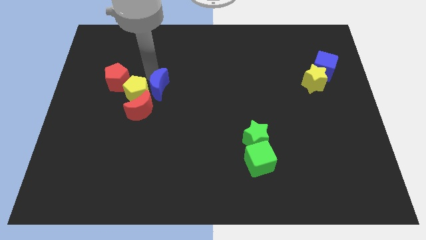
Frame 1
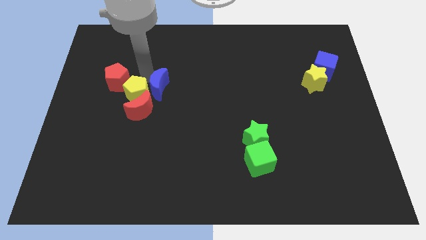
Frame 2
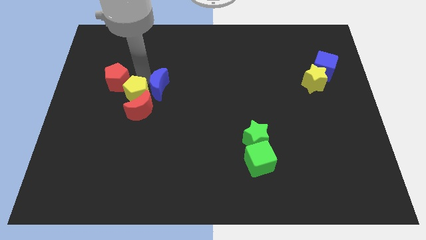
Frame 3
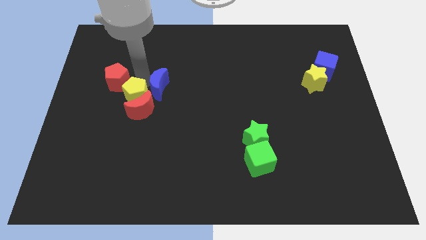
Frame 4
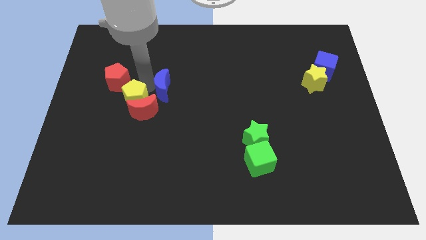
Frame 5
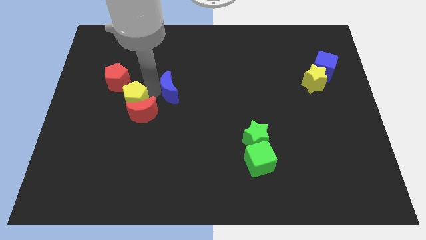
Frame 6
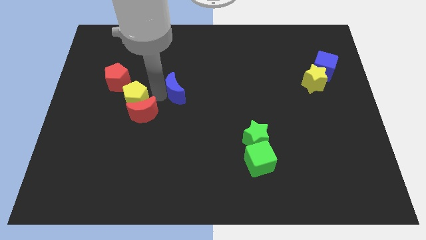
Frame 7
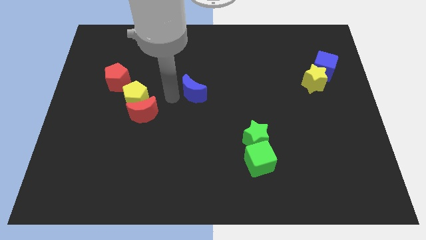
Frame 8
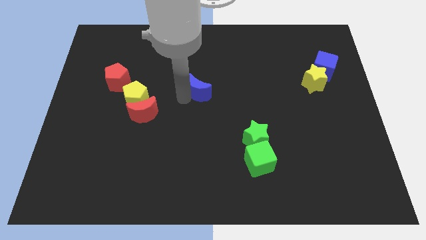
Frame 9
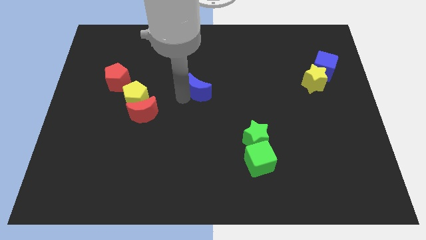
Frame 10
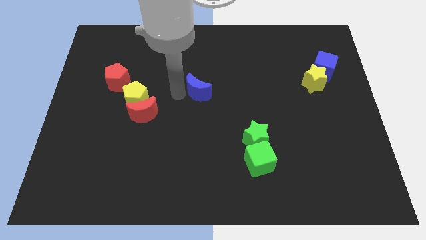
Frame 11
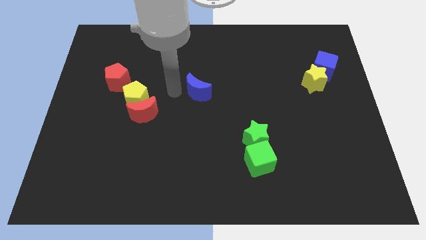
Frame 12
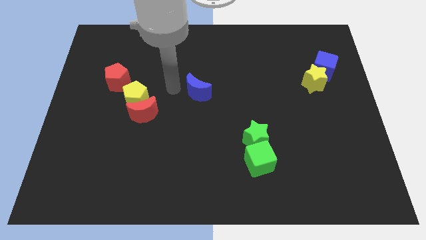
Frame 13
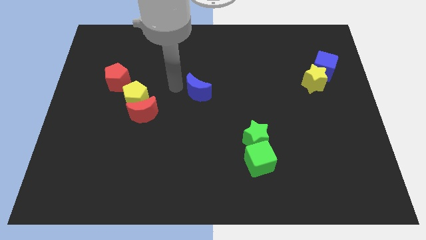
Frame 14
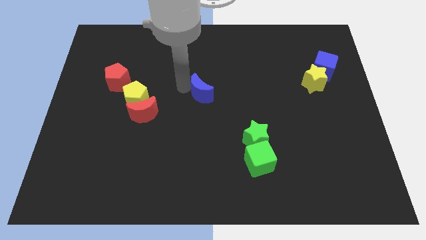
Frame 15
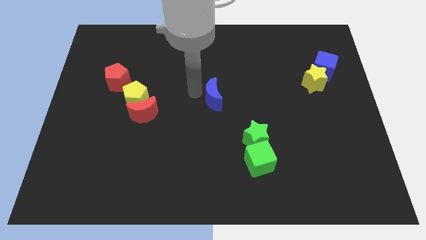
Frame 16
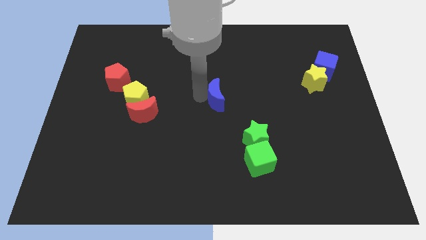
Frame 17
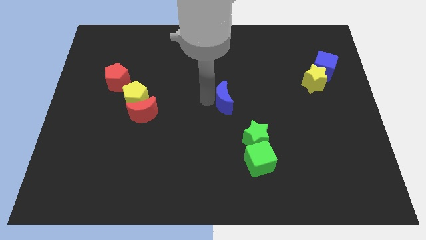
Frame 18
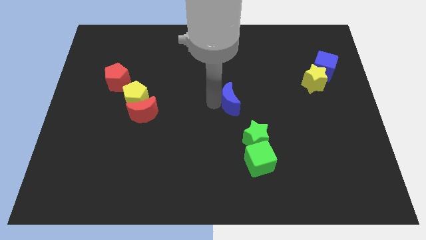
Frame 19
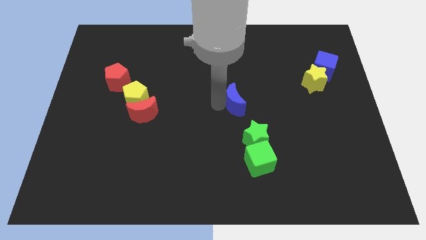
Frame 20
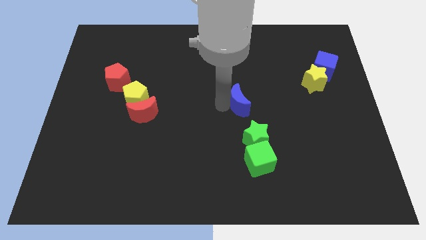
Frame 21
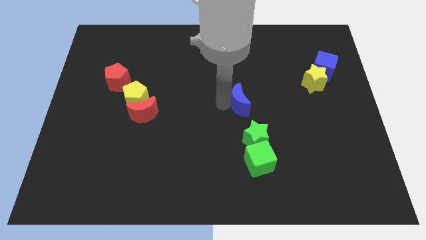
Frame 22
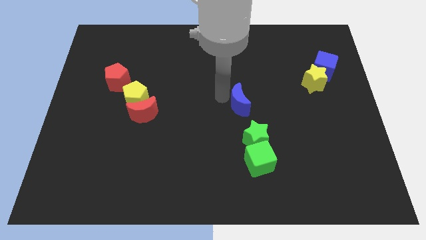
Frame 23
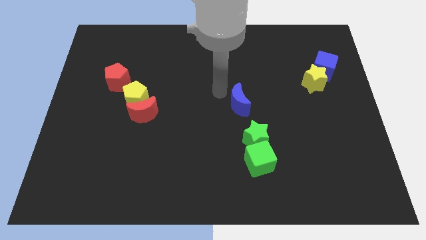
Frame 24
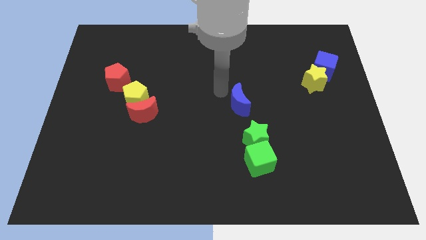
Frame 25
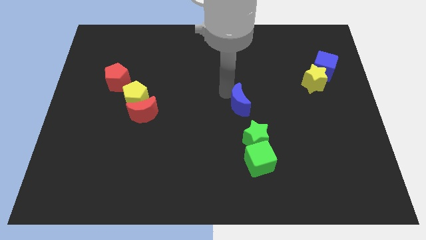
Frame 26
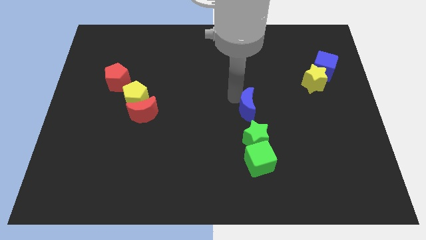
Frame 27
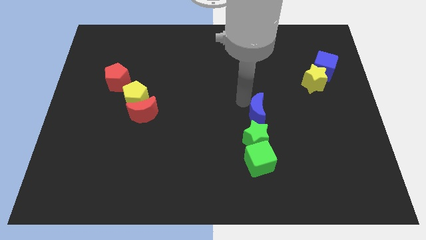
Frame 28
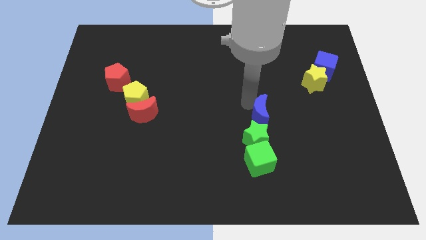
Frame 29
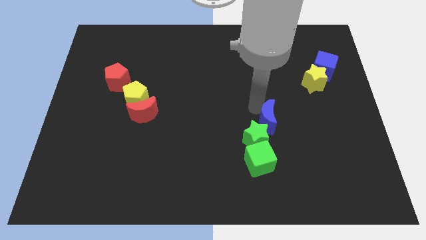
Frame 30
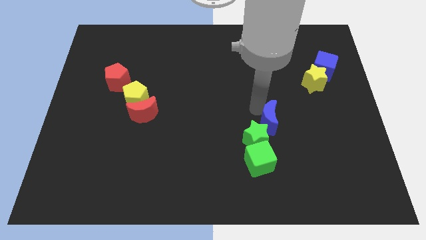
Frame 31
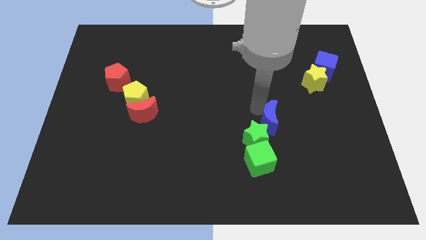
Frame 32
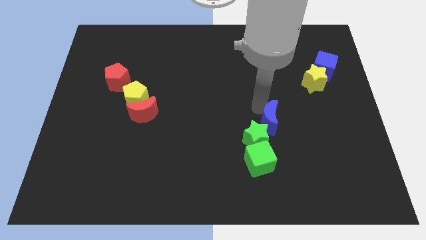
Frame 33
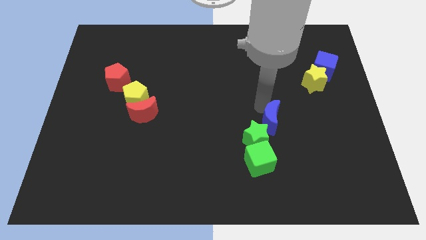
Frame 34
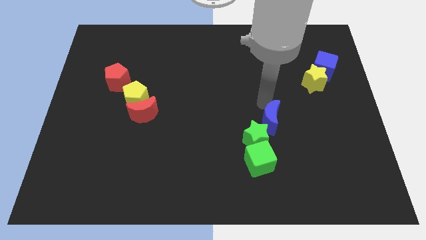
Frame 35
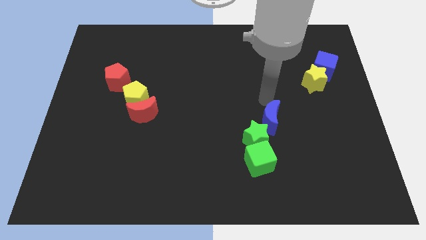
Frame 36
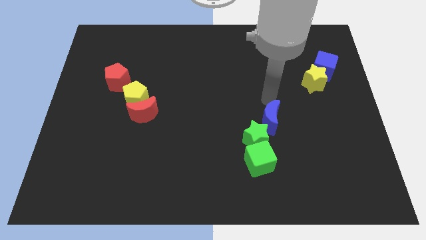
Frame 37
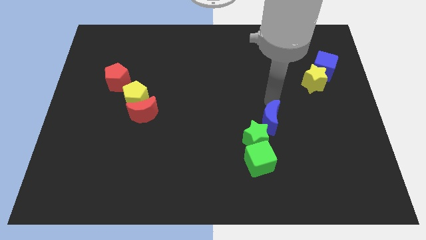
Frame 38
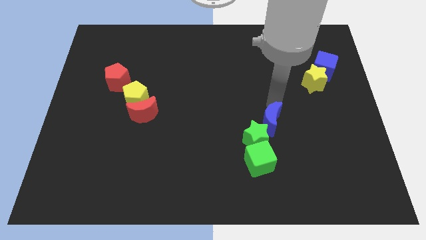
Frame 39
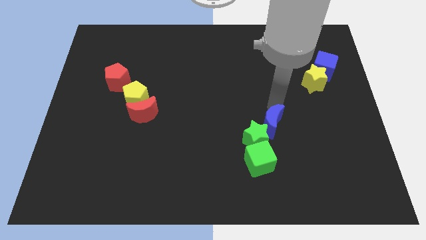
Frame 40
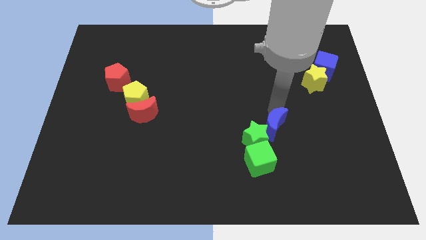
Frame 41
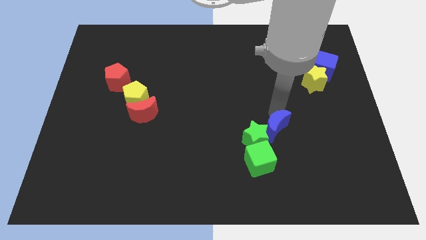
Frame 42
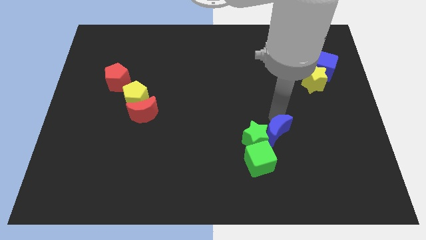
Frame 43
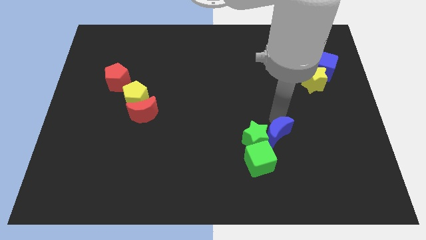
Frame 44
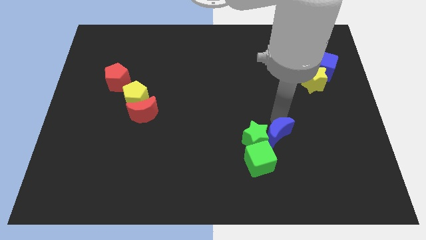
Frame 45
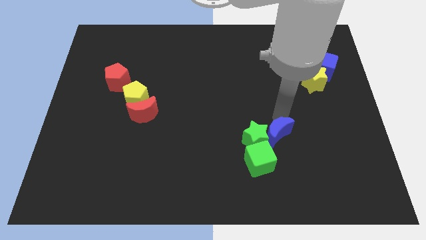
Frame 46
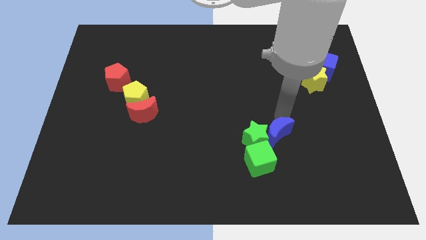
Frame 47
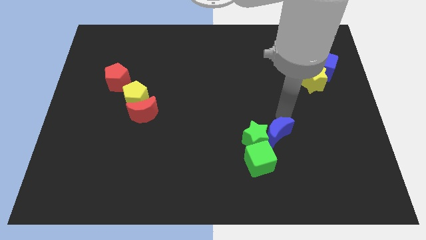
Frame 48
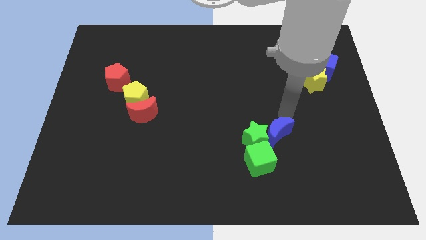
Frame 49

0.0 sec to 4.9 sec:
move the blue crescent into the right side of the green star

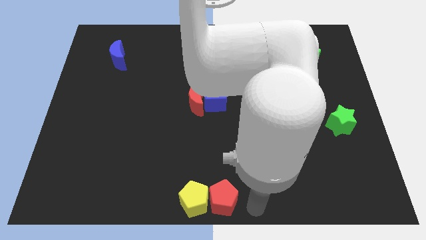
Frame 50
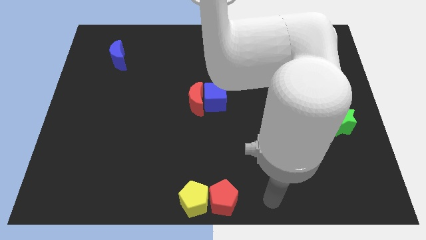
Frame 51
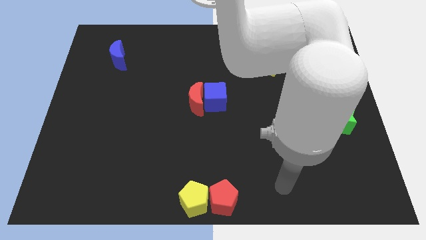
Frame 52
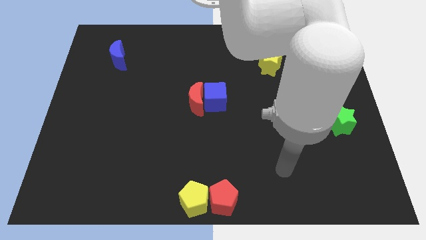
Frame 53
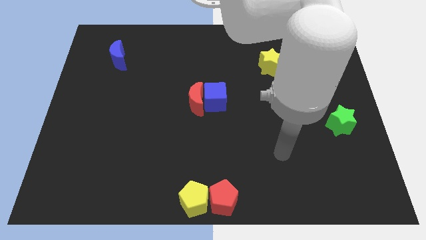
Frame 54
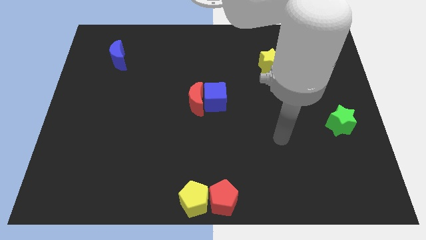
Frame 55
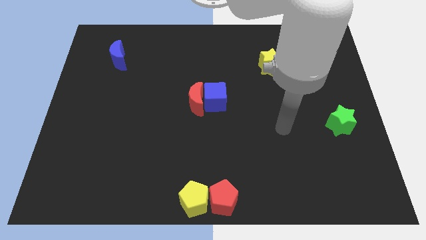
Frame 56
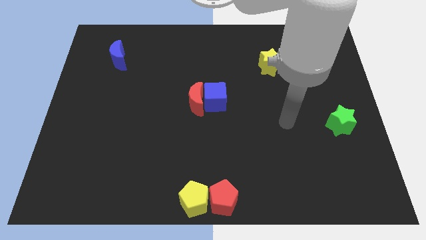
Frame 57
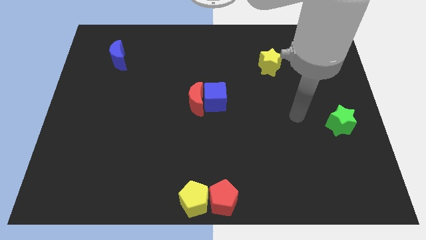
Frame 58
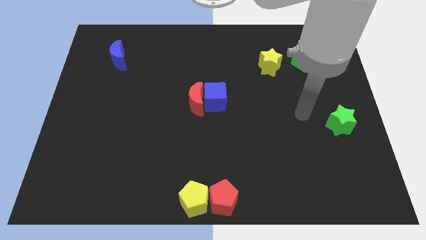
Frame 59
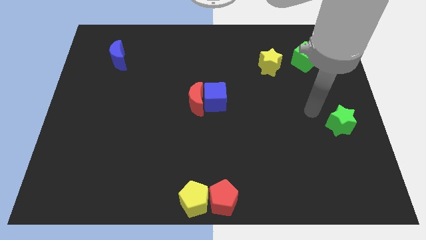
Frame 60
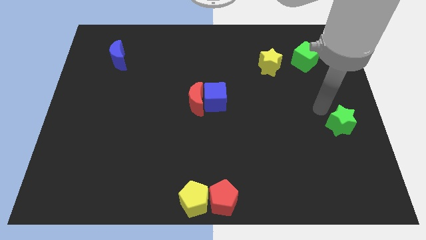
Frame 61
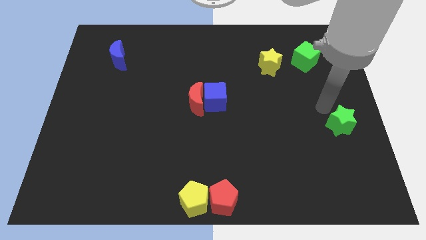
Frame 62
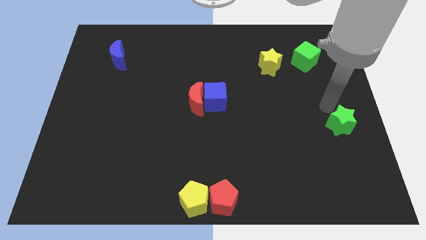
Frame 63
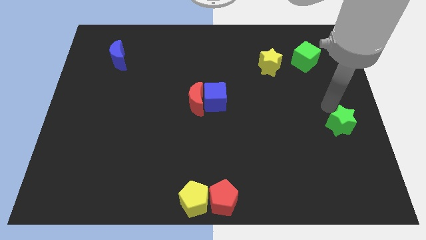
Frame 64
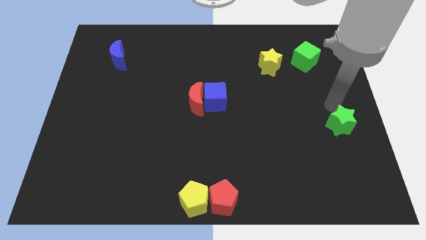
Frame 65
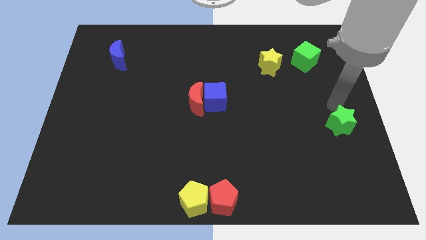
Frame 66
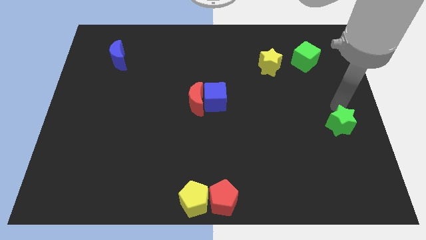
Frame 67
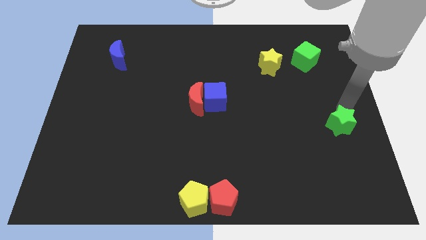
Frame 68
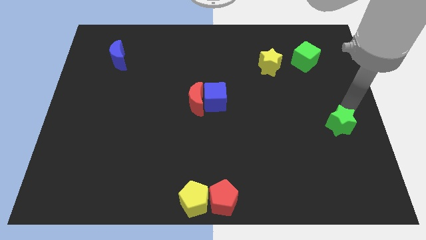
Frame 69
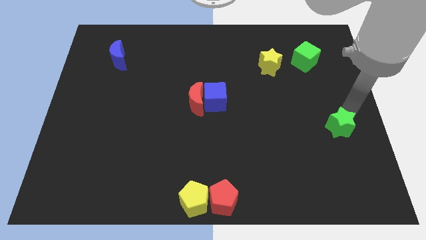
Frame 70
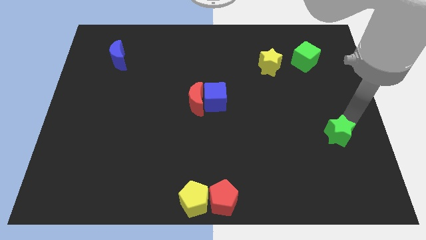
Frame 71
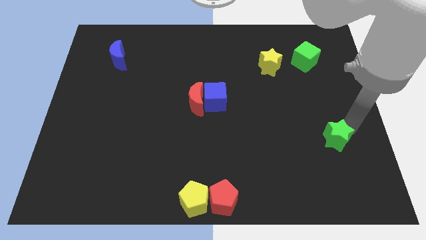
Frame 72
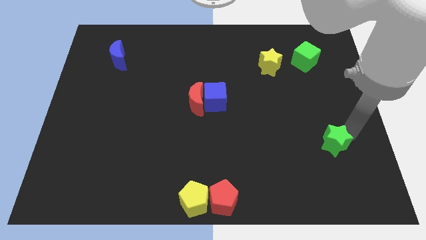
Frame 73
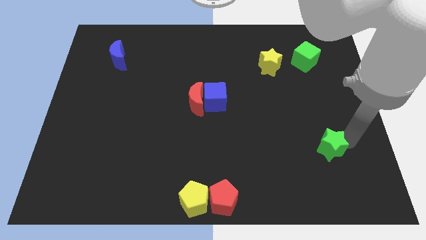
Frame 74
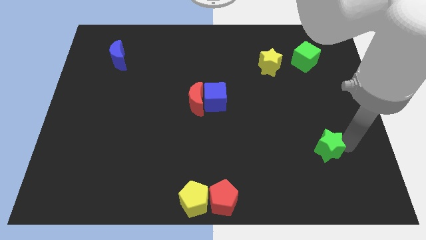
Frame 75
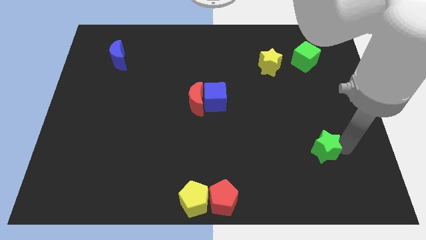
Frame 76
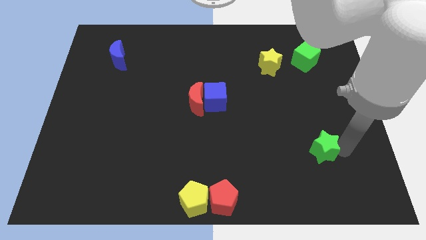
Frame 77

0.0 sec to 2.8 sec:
push the green star slightly to the bottom

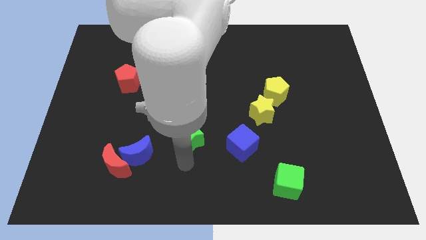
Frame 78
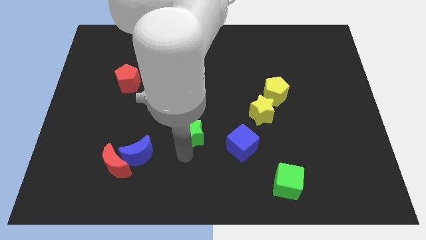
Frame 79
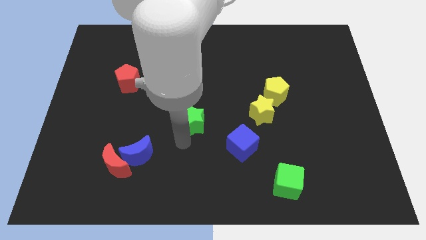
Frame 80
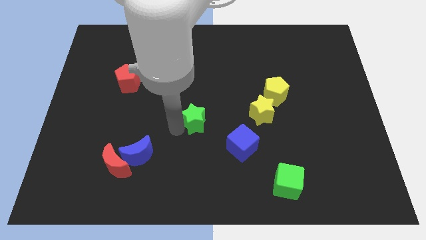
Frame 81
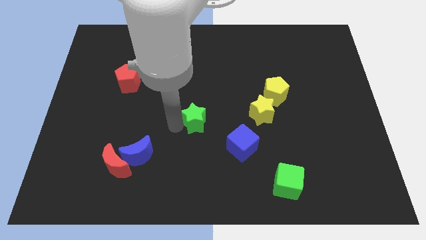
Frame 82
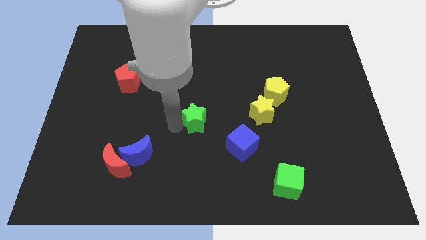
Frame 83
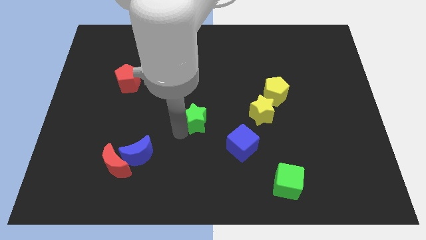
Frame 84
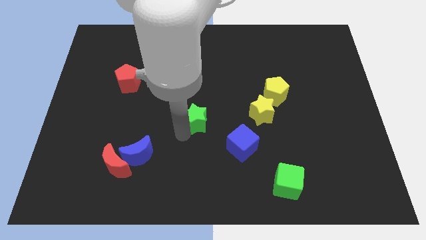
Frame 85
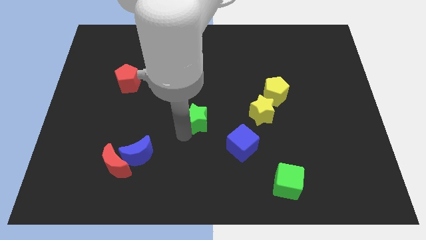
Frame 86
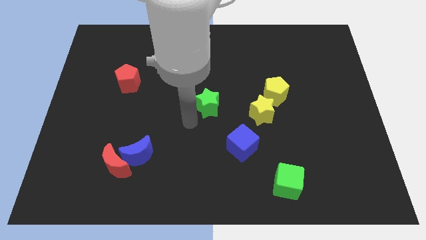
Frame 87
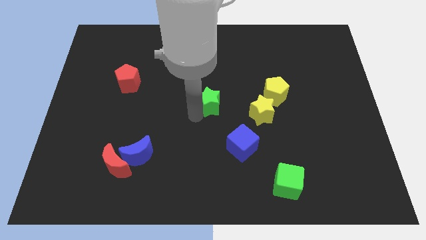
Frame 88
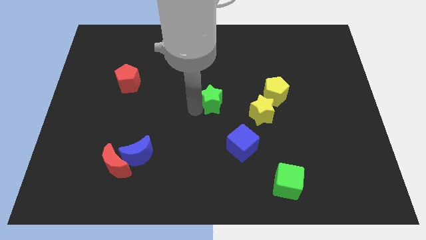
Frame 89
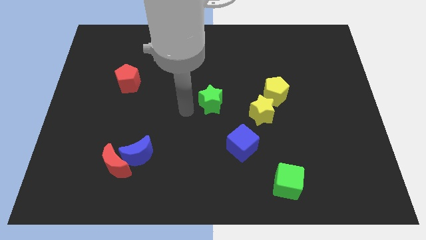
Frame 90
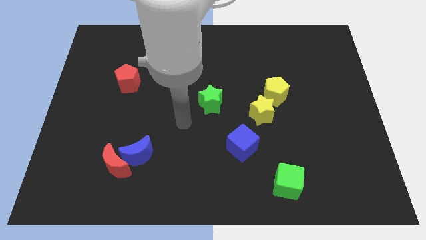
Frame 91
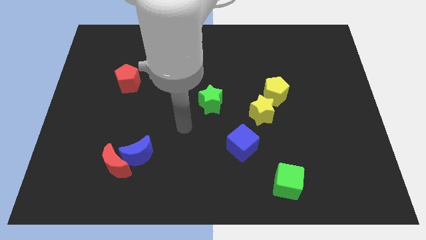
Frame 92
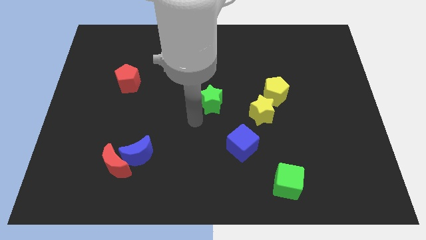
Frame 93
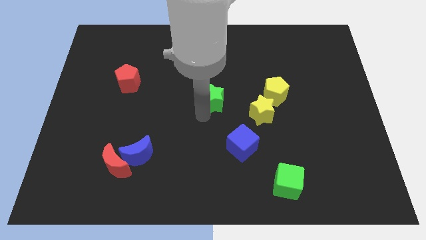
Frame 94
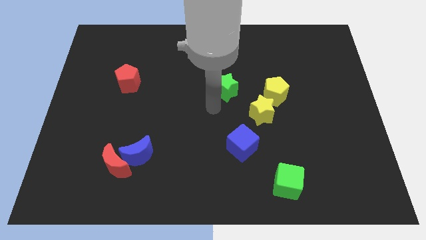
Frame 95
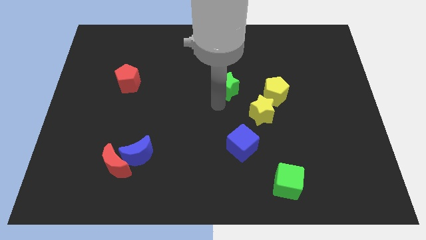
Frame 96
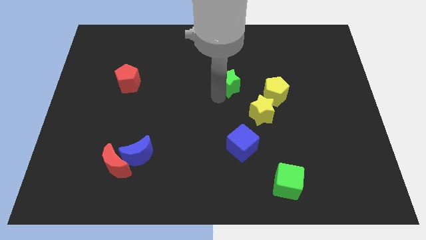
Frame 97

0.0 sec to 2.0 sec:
move the green star to the left side of the yellow pentagon
